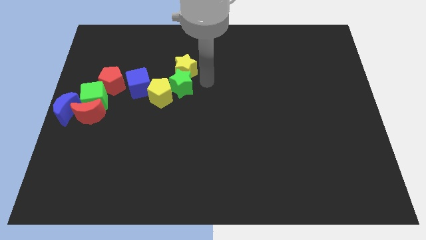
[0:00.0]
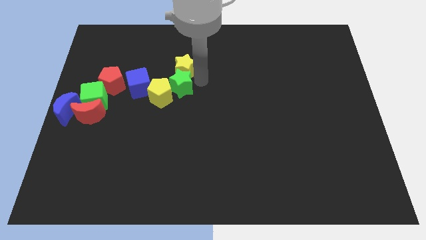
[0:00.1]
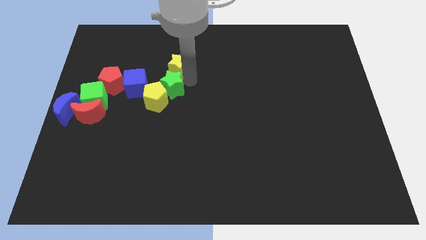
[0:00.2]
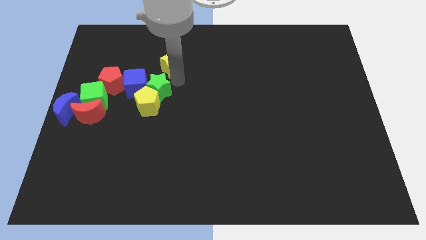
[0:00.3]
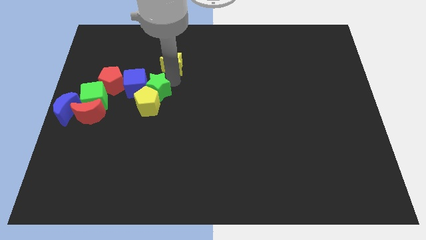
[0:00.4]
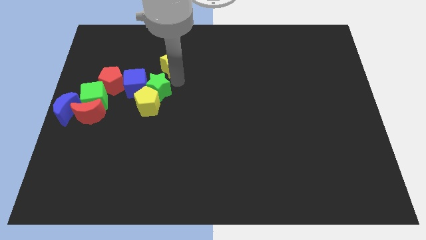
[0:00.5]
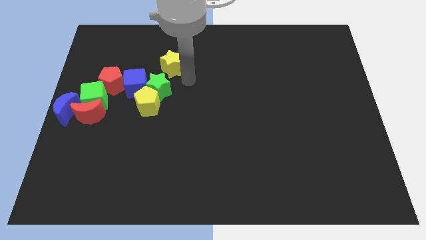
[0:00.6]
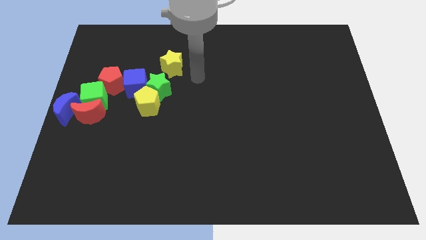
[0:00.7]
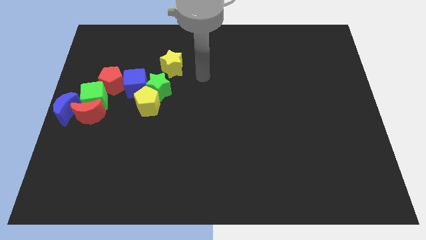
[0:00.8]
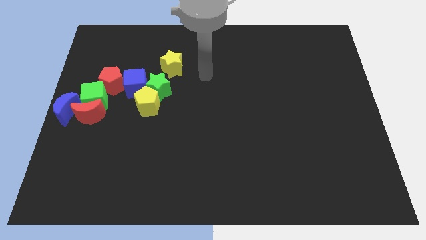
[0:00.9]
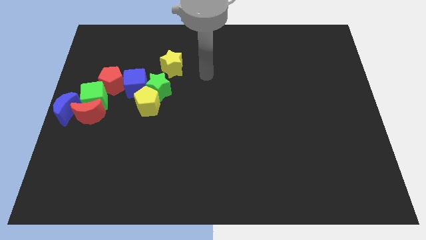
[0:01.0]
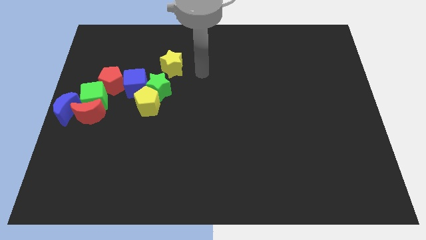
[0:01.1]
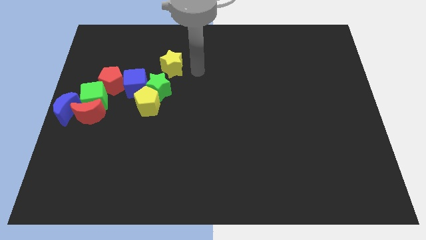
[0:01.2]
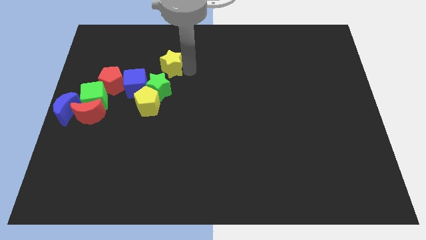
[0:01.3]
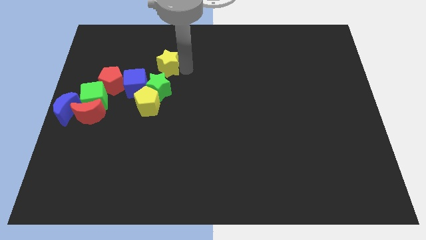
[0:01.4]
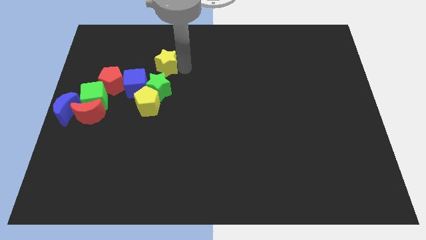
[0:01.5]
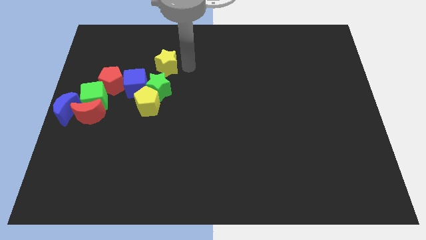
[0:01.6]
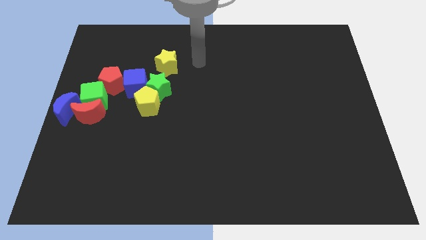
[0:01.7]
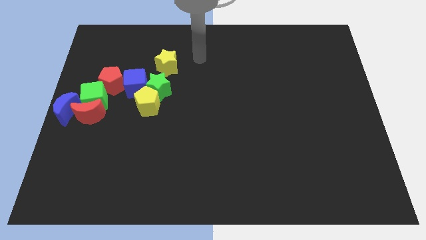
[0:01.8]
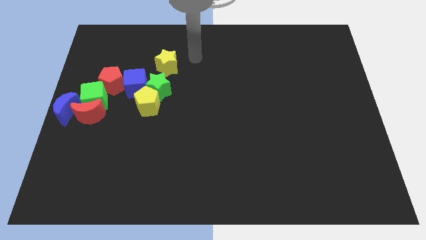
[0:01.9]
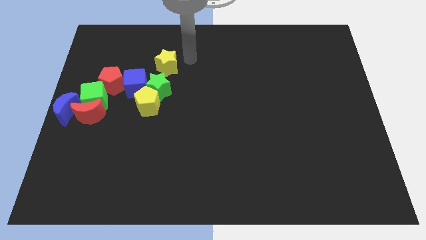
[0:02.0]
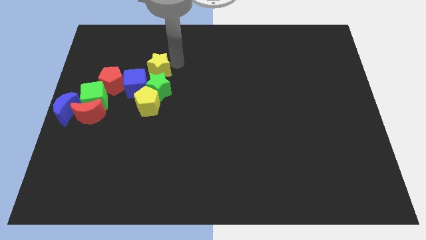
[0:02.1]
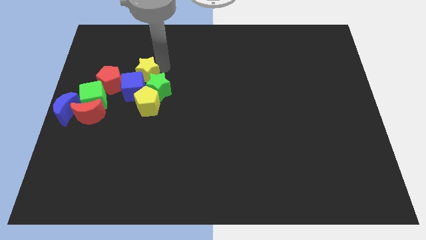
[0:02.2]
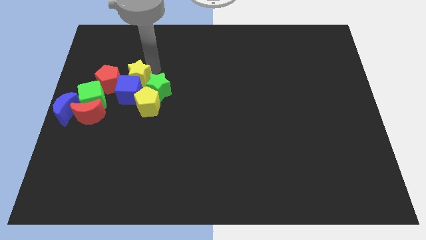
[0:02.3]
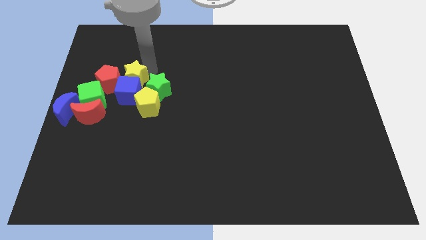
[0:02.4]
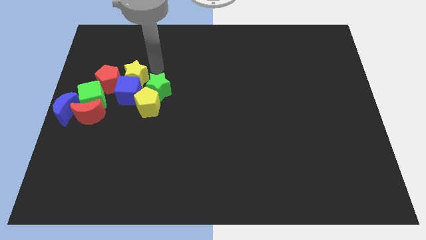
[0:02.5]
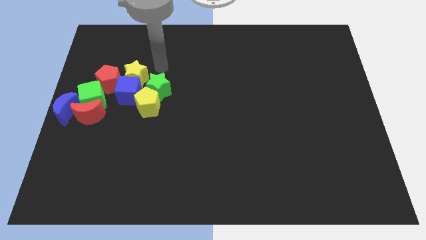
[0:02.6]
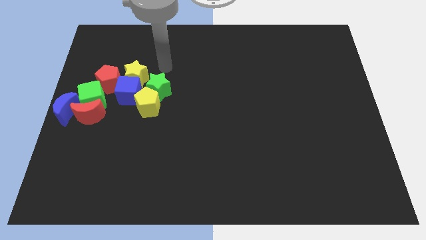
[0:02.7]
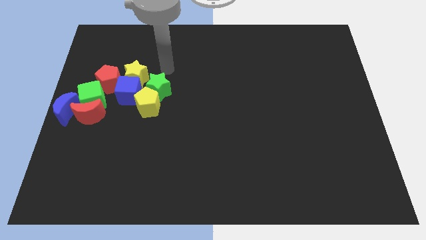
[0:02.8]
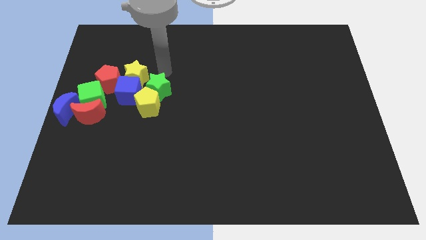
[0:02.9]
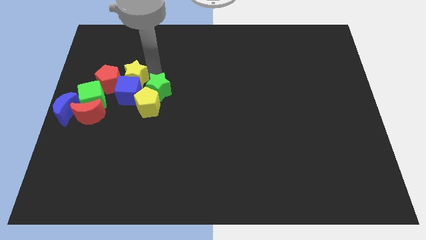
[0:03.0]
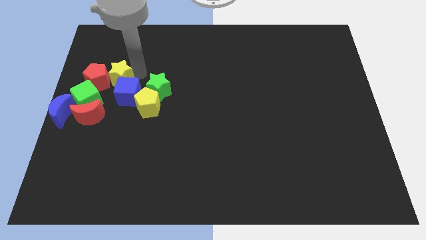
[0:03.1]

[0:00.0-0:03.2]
place the yellow star at the top side of the blue cube

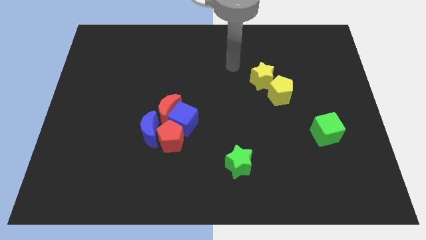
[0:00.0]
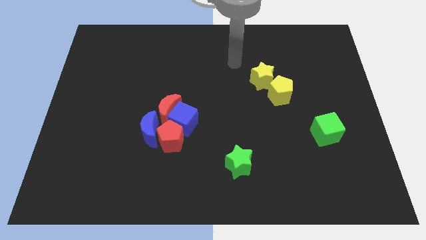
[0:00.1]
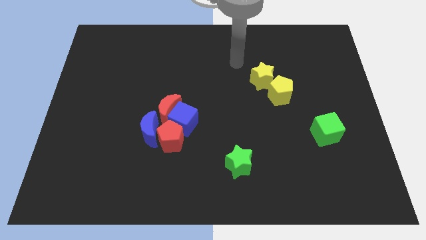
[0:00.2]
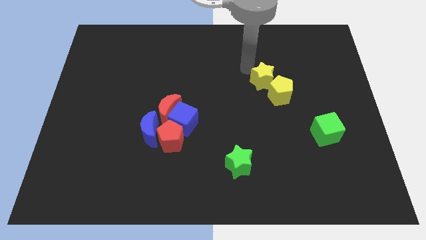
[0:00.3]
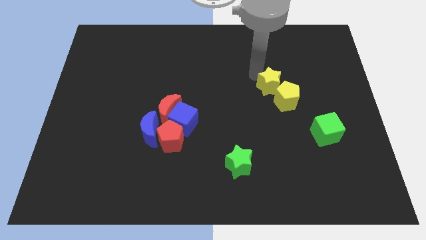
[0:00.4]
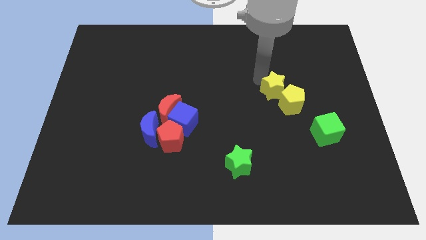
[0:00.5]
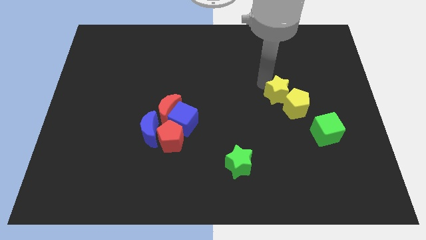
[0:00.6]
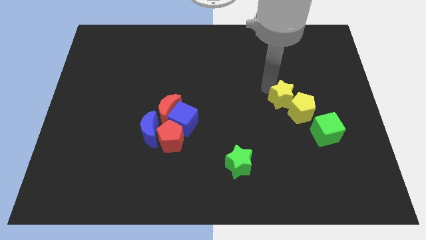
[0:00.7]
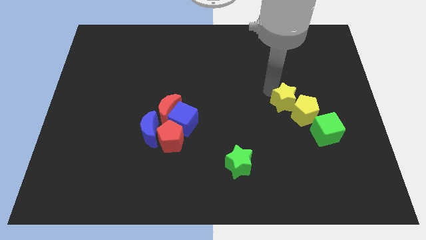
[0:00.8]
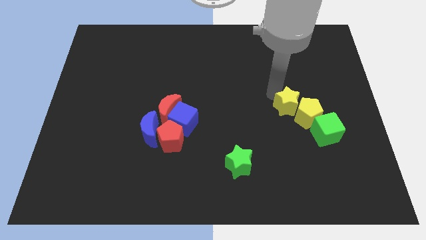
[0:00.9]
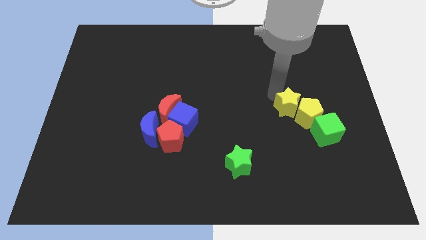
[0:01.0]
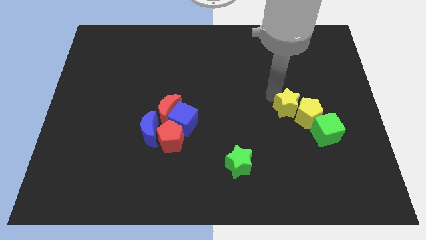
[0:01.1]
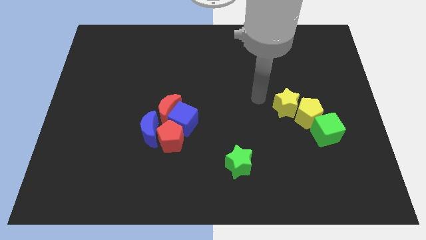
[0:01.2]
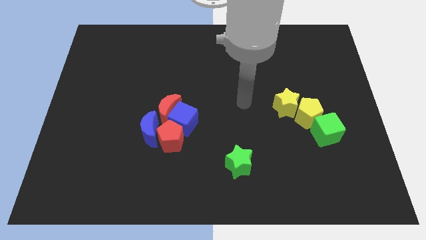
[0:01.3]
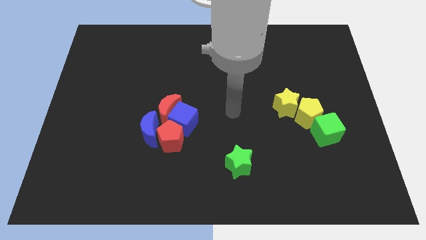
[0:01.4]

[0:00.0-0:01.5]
push the yellow pentagon with the yellow star towards the green cube

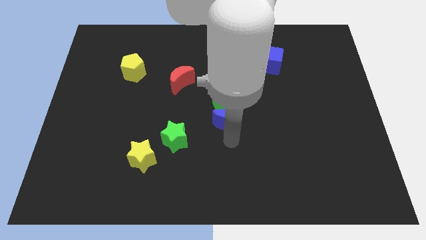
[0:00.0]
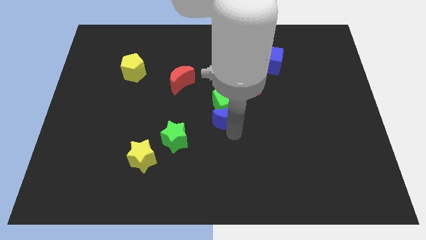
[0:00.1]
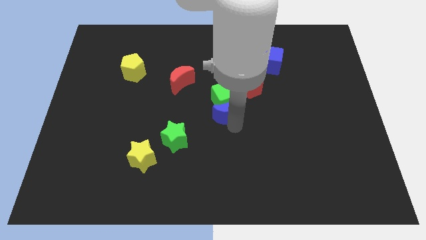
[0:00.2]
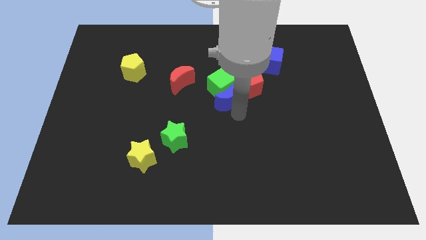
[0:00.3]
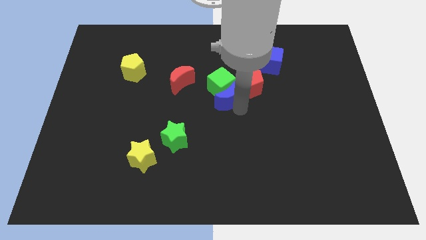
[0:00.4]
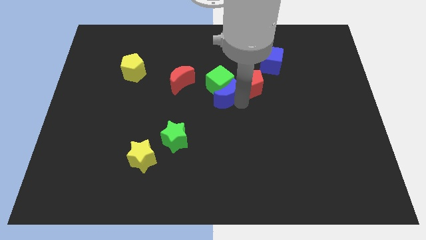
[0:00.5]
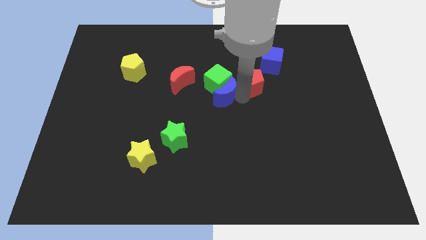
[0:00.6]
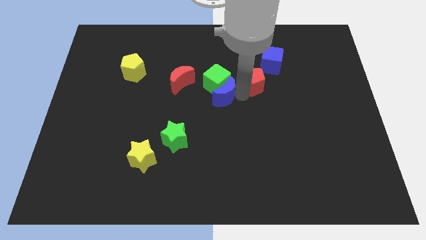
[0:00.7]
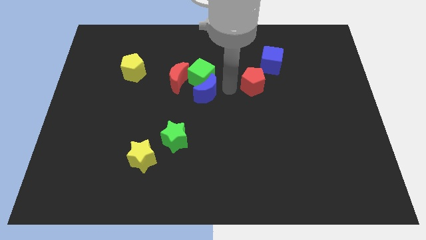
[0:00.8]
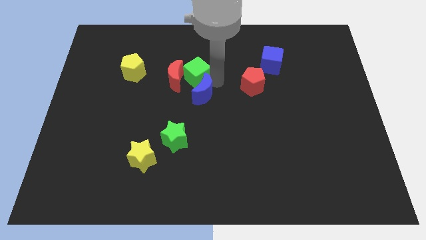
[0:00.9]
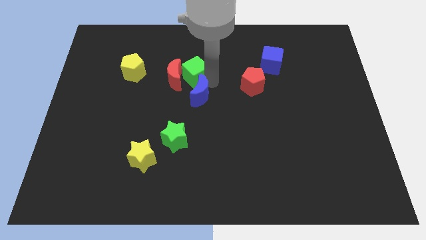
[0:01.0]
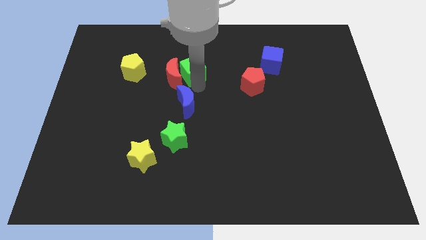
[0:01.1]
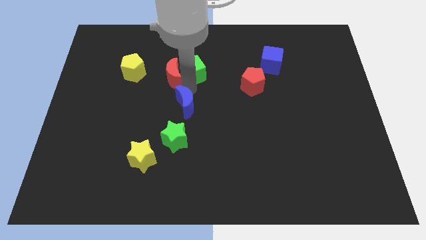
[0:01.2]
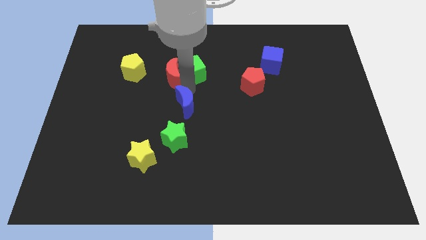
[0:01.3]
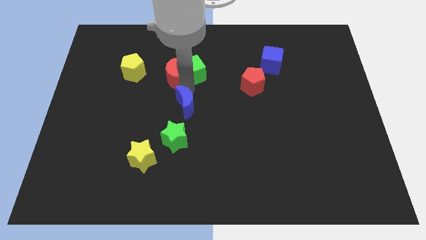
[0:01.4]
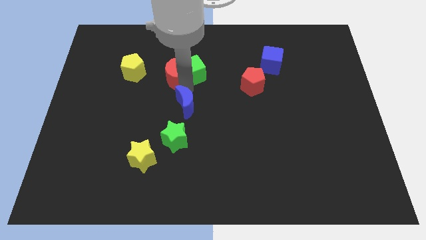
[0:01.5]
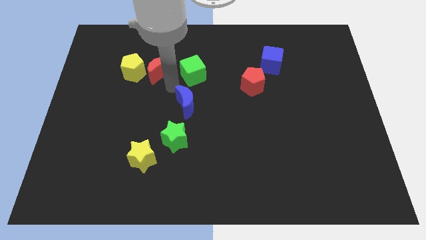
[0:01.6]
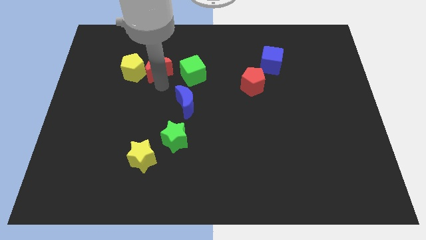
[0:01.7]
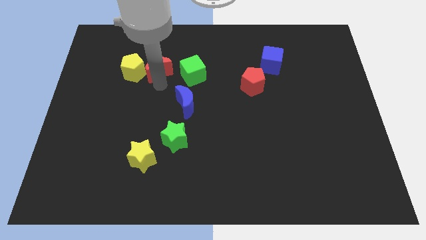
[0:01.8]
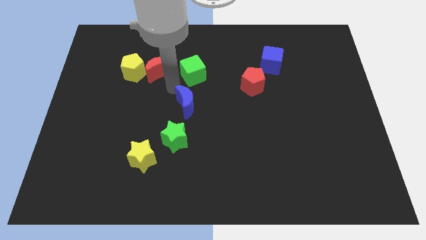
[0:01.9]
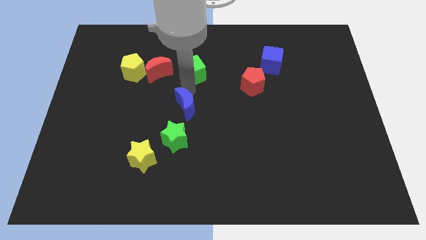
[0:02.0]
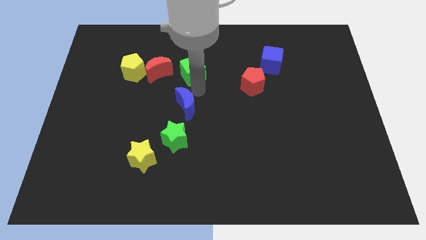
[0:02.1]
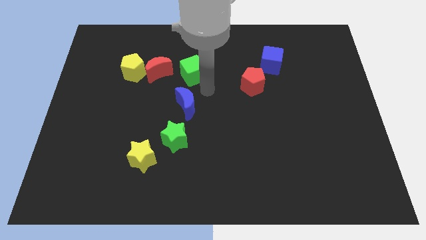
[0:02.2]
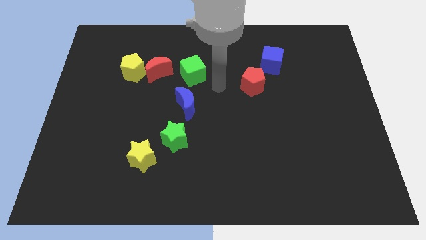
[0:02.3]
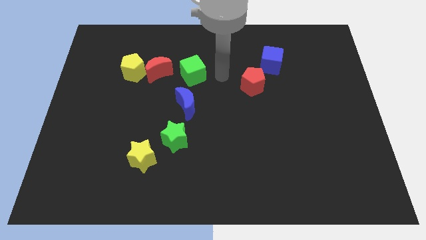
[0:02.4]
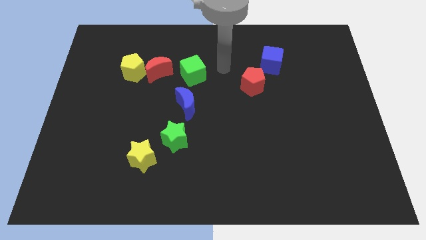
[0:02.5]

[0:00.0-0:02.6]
separate the blue crescent and the green cube

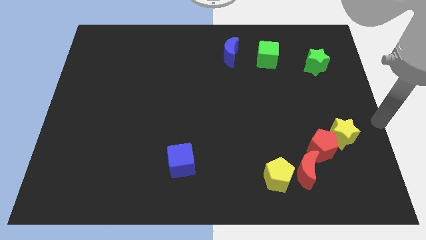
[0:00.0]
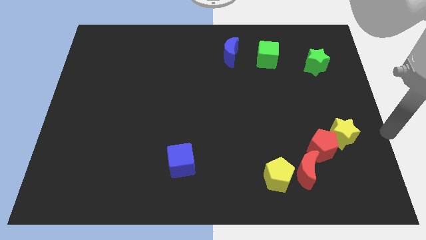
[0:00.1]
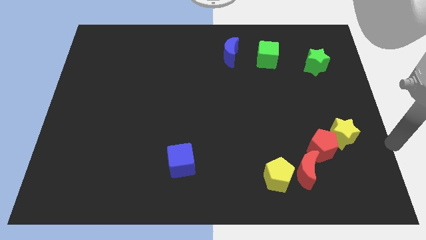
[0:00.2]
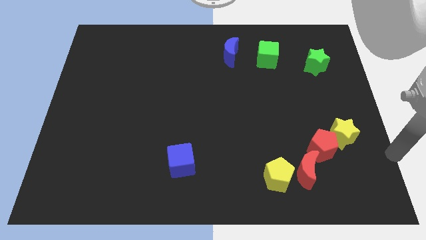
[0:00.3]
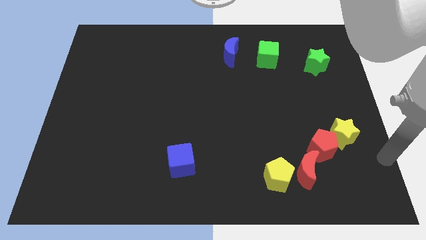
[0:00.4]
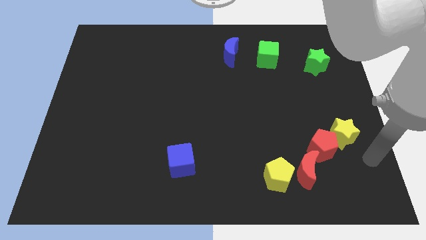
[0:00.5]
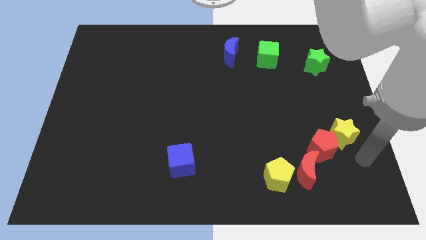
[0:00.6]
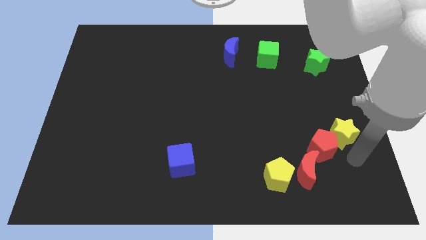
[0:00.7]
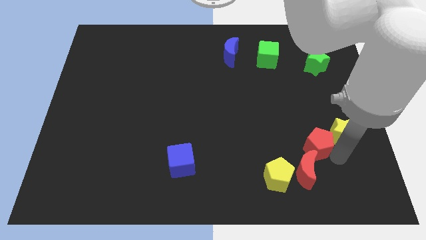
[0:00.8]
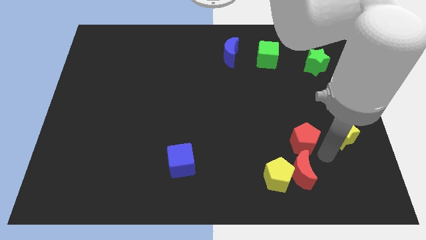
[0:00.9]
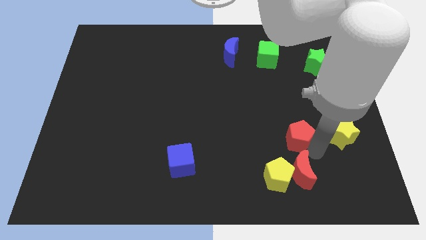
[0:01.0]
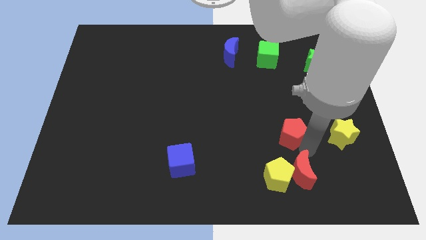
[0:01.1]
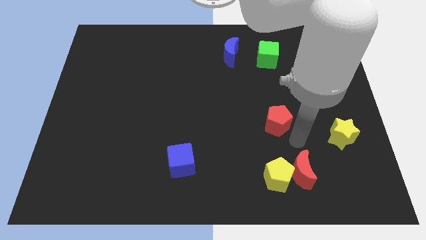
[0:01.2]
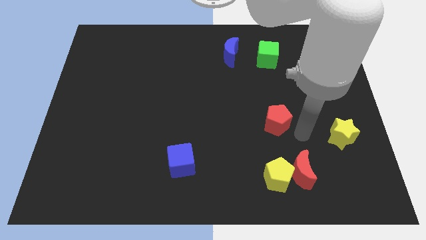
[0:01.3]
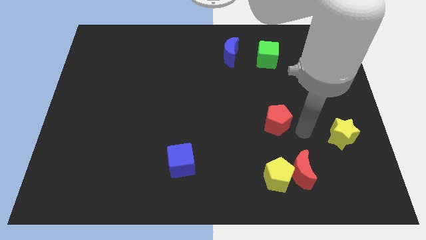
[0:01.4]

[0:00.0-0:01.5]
push the red pentagon diagonal to the top of the red crescent

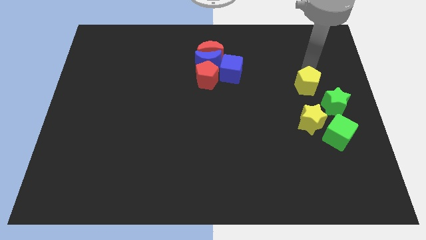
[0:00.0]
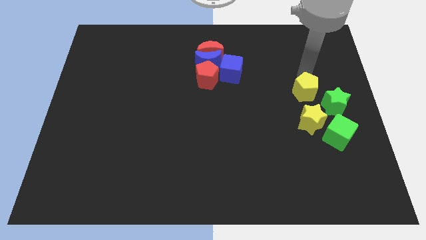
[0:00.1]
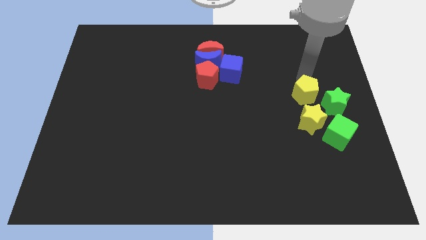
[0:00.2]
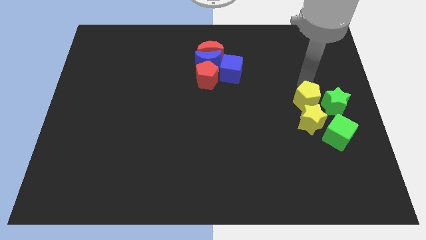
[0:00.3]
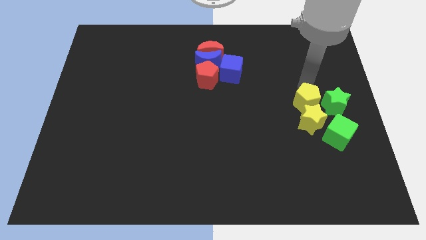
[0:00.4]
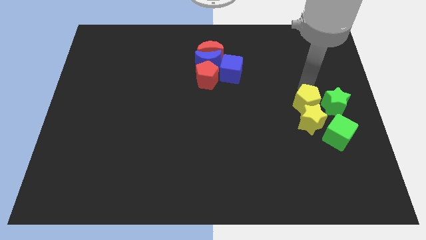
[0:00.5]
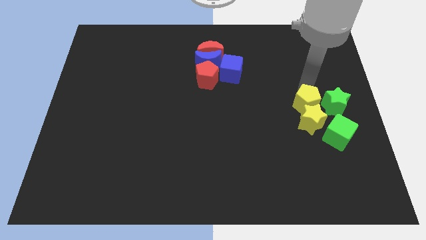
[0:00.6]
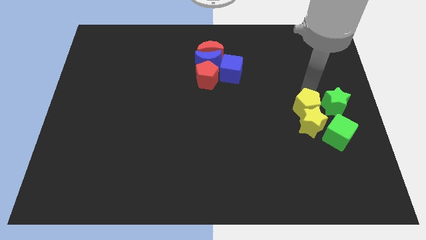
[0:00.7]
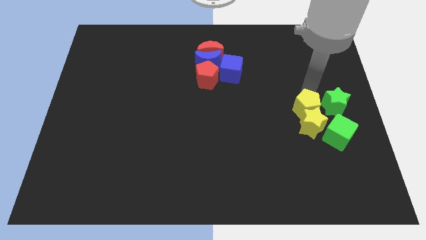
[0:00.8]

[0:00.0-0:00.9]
move the yellow pentagon into the yellow star
